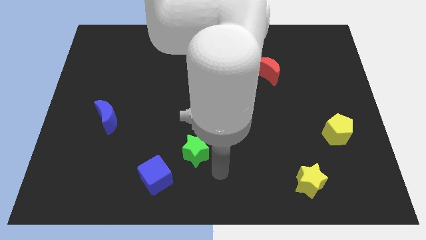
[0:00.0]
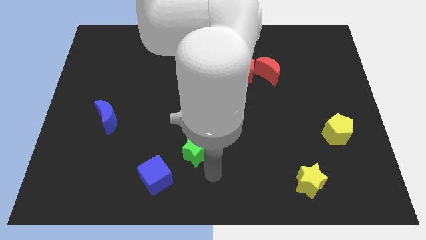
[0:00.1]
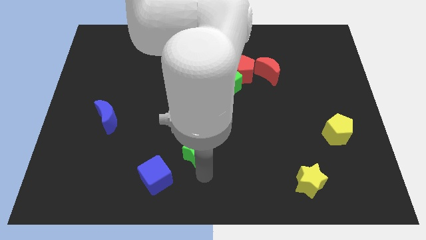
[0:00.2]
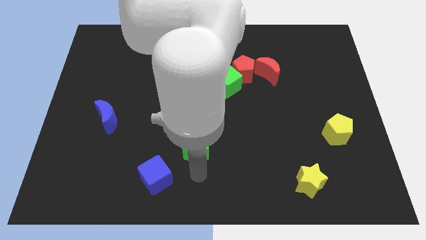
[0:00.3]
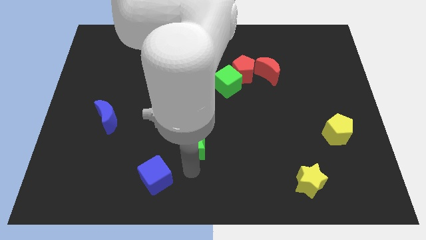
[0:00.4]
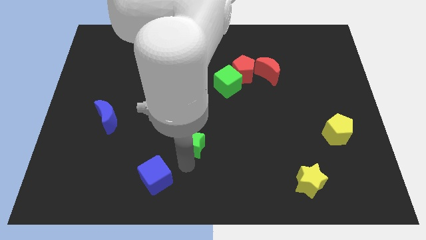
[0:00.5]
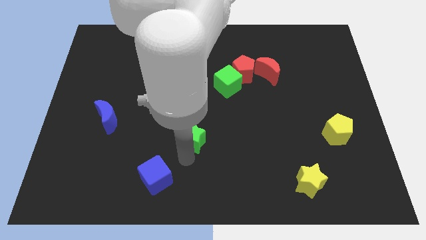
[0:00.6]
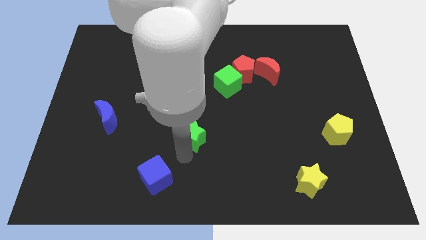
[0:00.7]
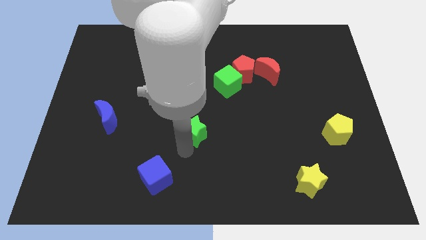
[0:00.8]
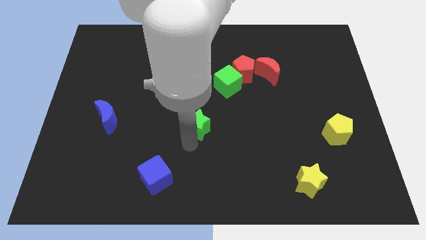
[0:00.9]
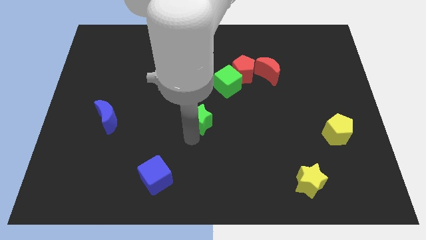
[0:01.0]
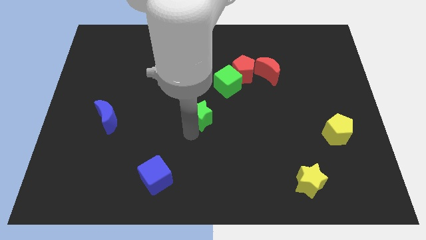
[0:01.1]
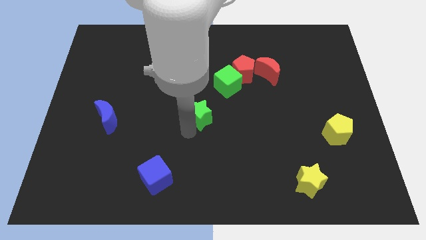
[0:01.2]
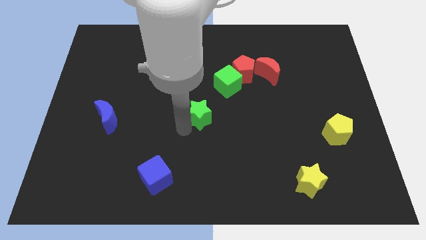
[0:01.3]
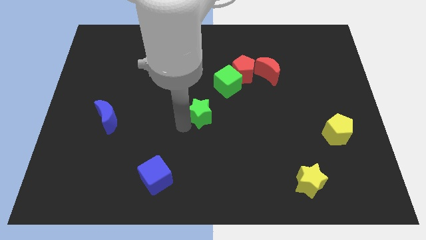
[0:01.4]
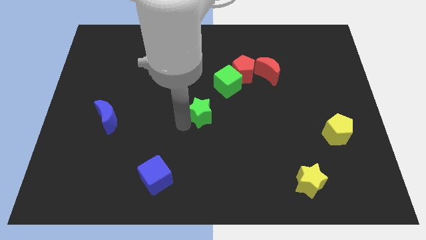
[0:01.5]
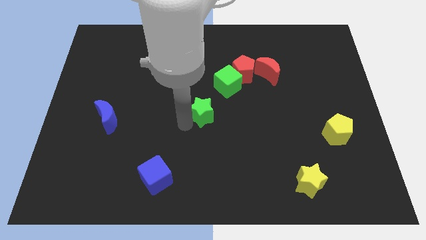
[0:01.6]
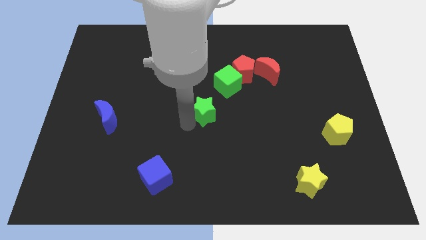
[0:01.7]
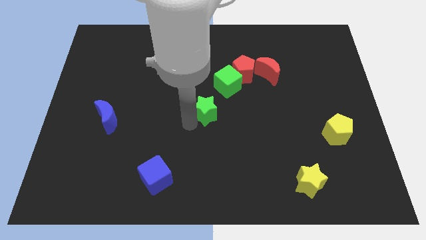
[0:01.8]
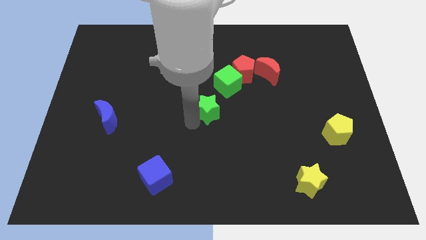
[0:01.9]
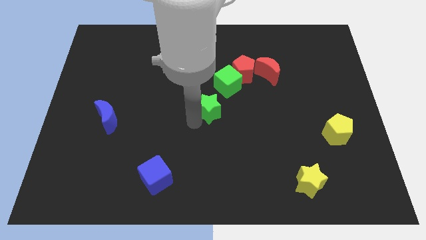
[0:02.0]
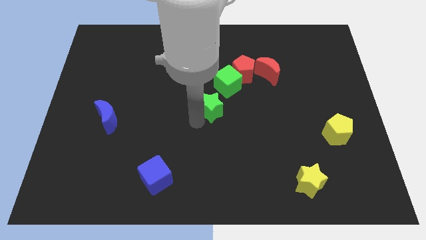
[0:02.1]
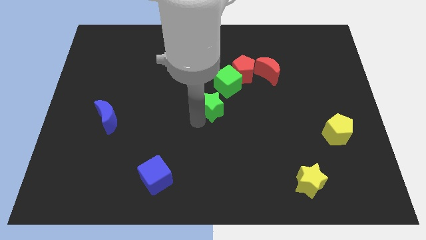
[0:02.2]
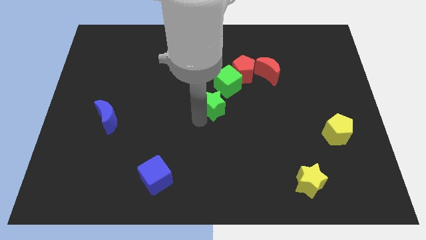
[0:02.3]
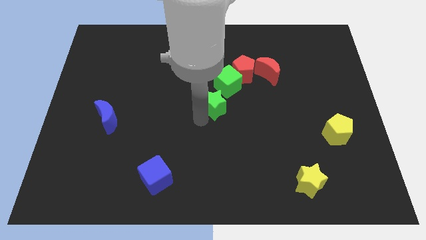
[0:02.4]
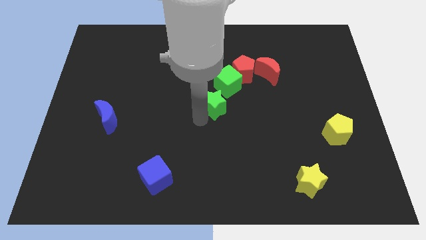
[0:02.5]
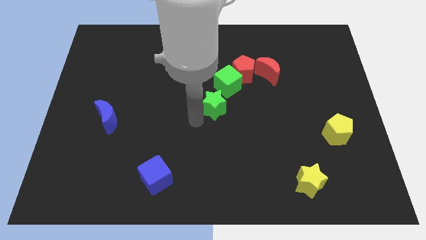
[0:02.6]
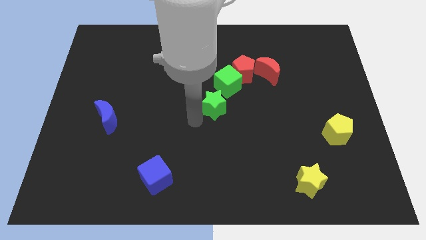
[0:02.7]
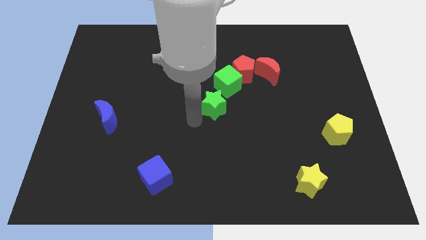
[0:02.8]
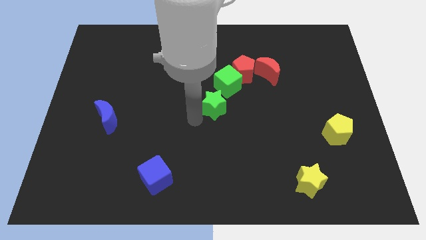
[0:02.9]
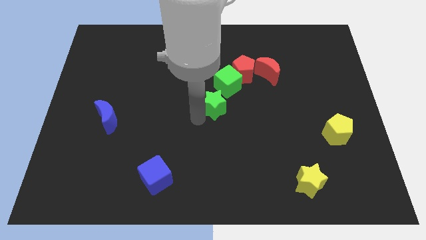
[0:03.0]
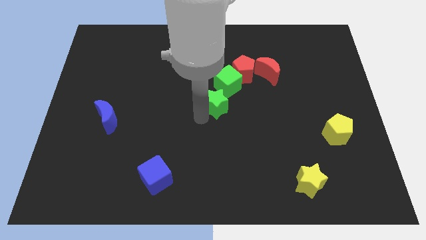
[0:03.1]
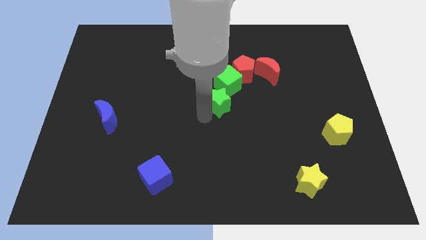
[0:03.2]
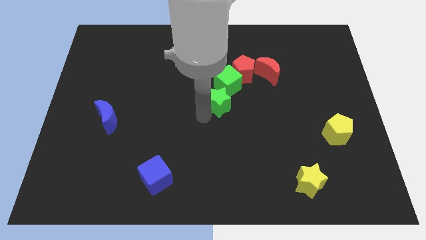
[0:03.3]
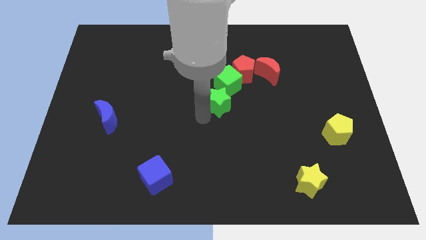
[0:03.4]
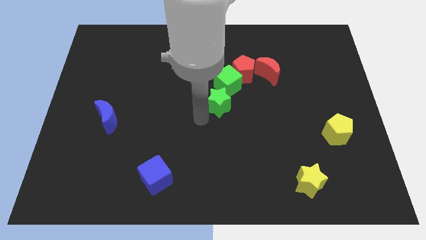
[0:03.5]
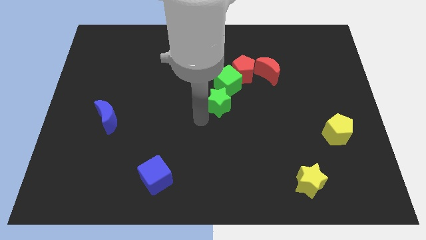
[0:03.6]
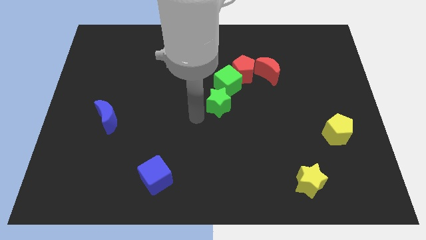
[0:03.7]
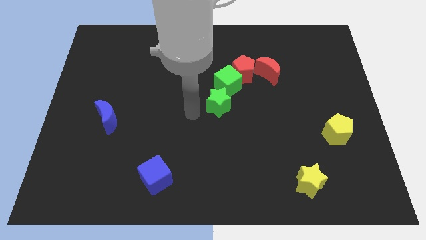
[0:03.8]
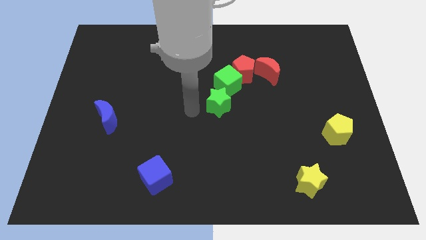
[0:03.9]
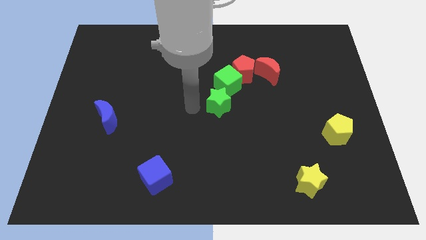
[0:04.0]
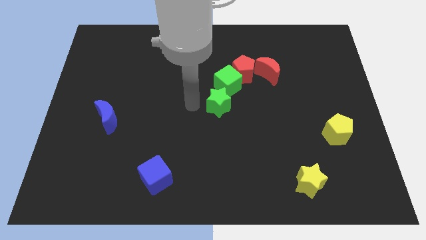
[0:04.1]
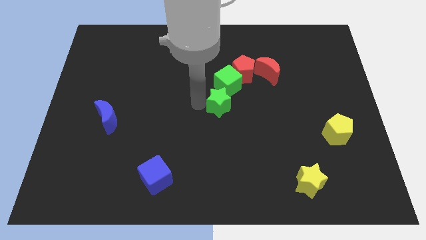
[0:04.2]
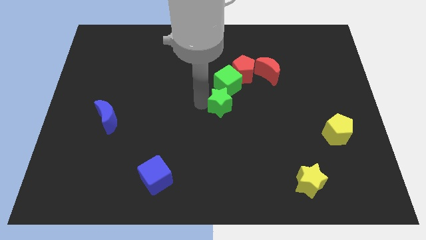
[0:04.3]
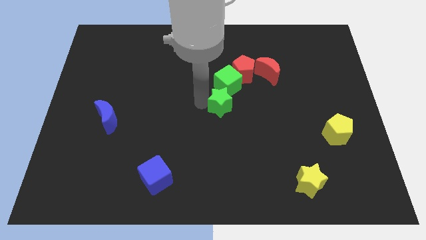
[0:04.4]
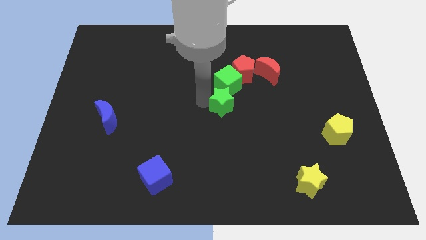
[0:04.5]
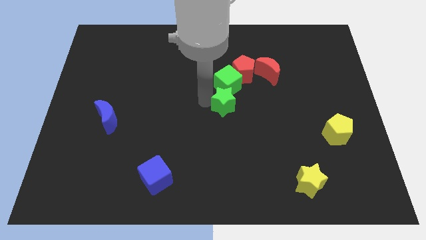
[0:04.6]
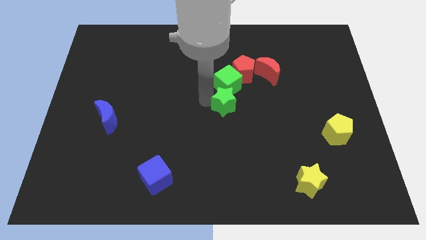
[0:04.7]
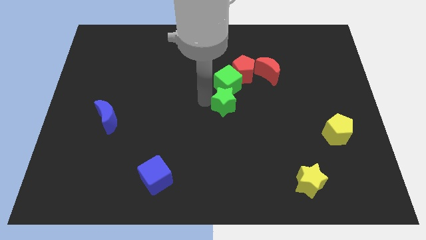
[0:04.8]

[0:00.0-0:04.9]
place the green star at the bottom of the green cube

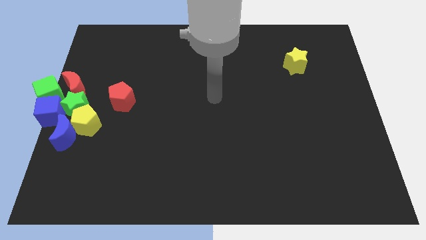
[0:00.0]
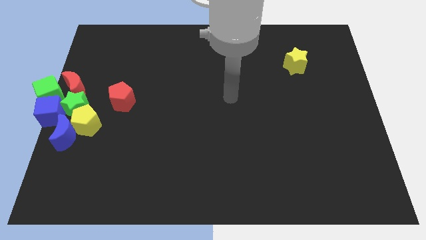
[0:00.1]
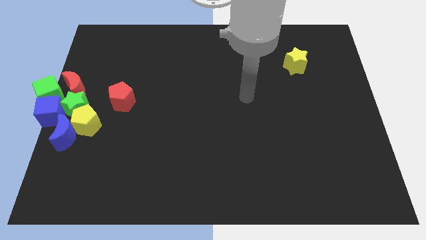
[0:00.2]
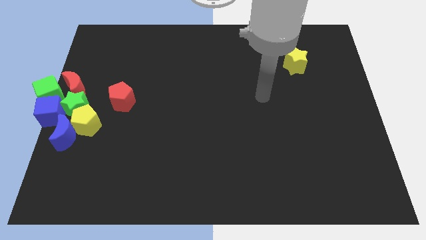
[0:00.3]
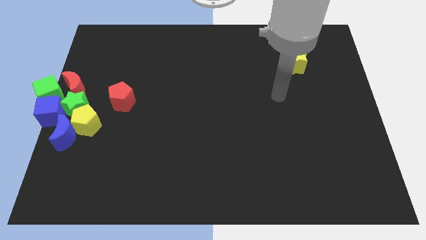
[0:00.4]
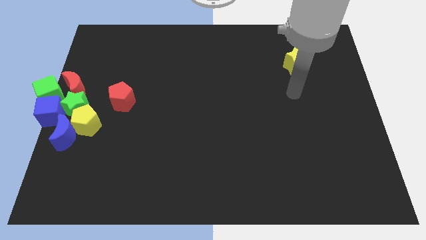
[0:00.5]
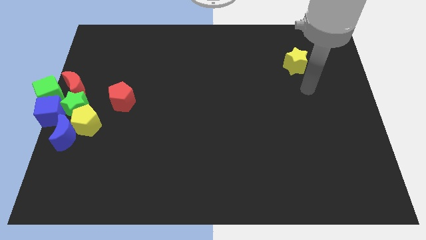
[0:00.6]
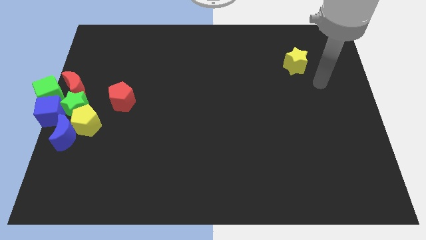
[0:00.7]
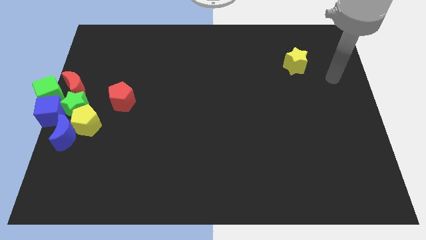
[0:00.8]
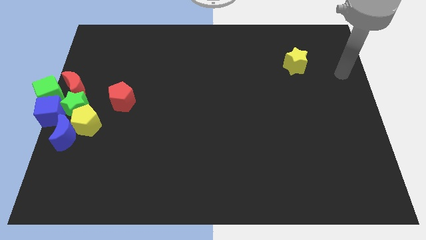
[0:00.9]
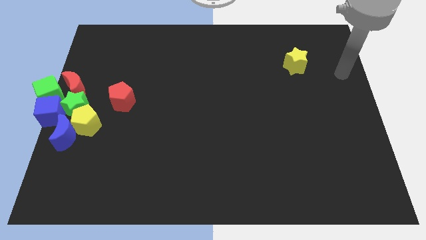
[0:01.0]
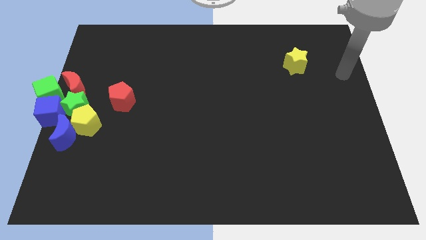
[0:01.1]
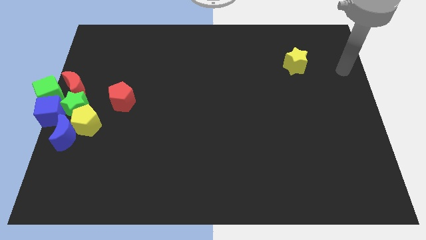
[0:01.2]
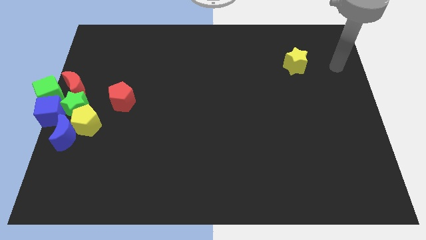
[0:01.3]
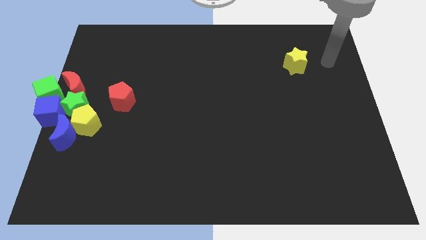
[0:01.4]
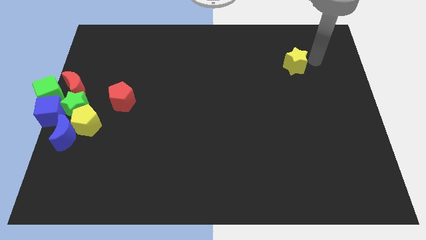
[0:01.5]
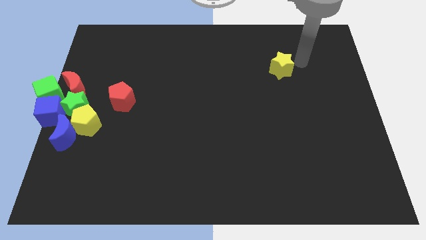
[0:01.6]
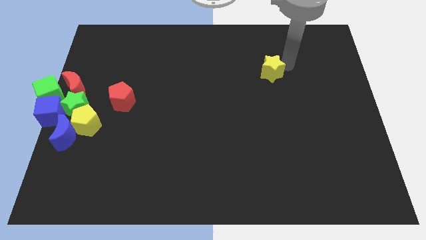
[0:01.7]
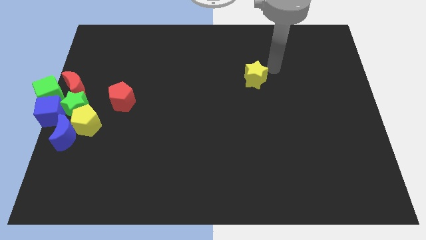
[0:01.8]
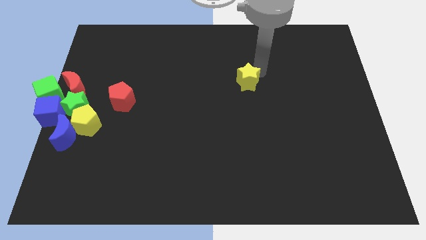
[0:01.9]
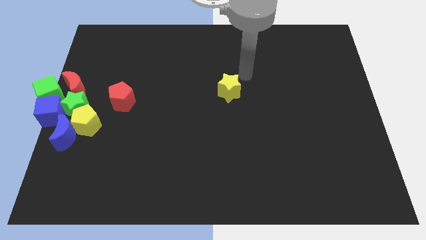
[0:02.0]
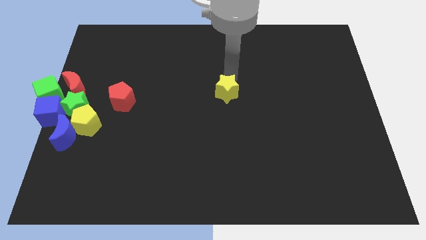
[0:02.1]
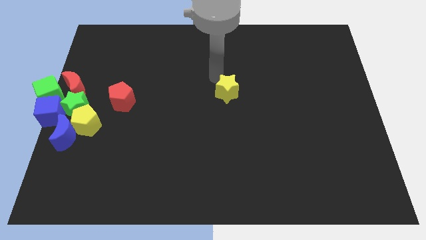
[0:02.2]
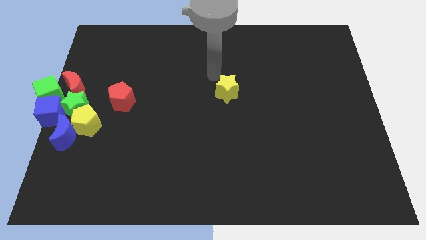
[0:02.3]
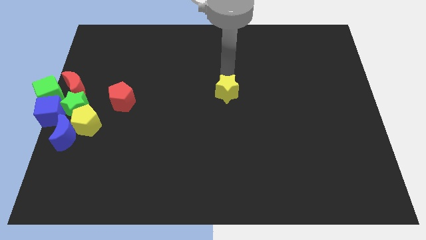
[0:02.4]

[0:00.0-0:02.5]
move the yellow star to the center

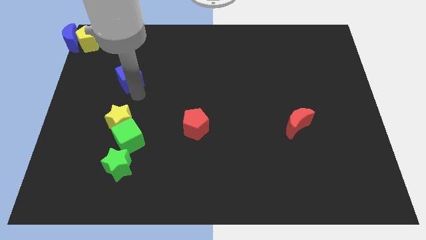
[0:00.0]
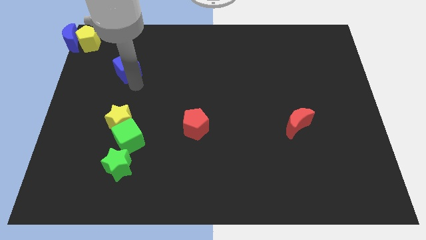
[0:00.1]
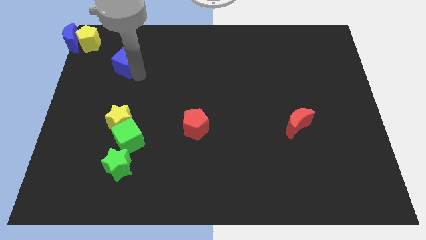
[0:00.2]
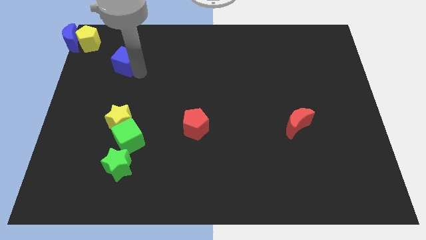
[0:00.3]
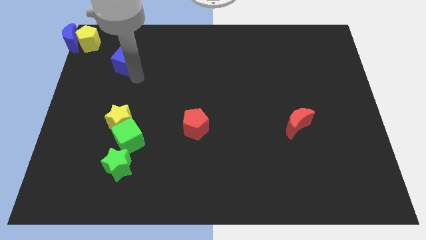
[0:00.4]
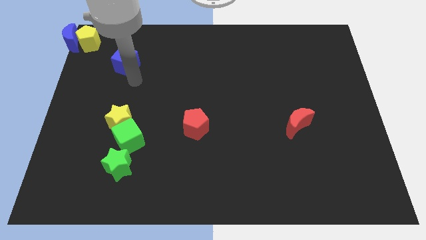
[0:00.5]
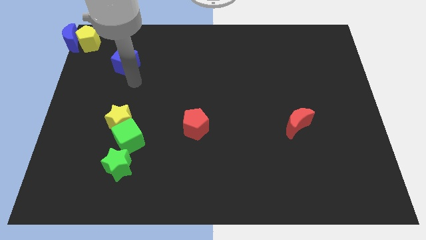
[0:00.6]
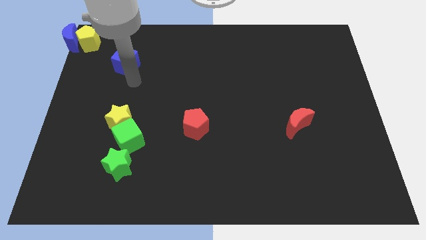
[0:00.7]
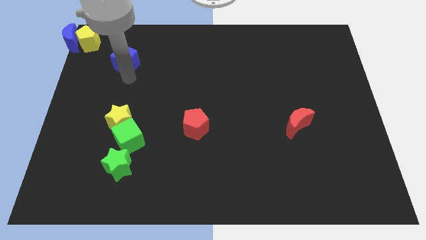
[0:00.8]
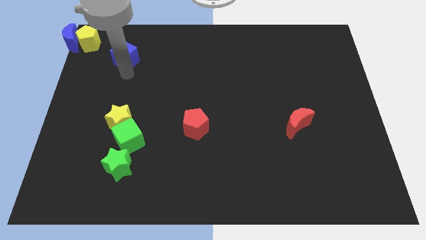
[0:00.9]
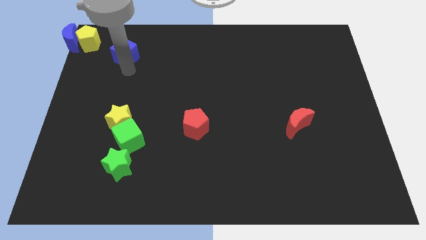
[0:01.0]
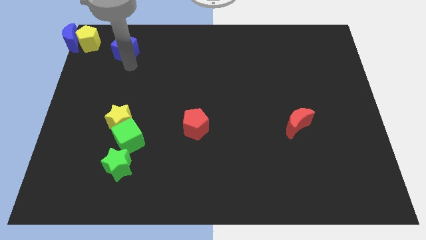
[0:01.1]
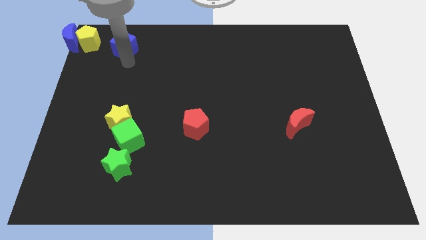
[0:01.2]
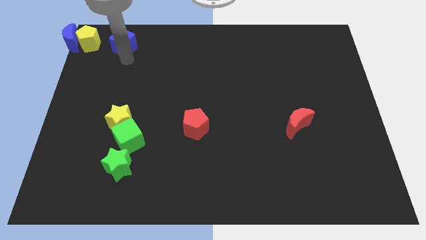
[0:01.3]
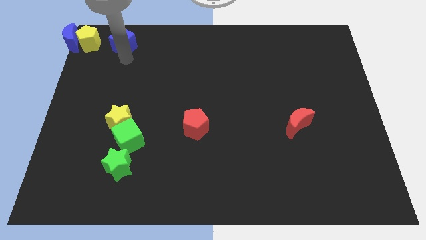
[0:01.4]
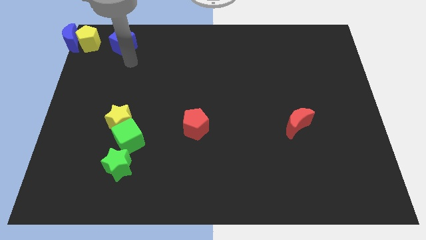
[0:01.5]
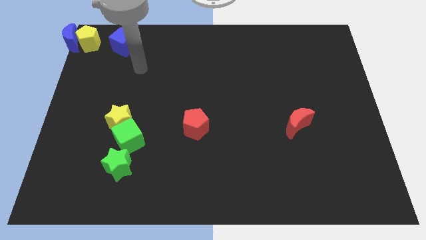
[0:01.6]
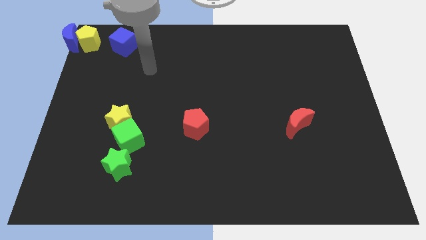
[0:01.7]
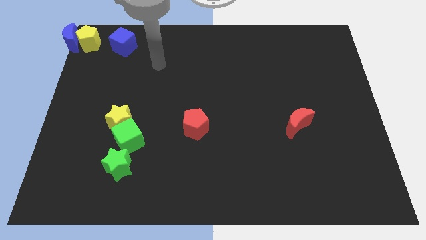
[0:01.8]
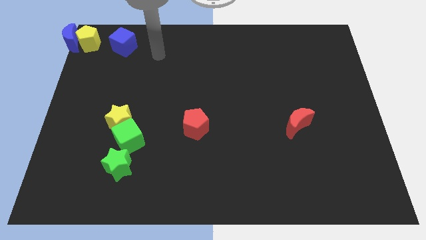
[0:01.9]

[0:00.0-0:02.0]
put the blue cube right to the yellow pentagon
